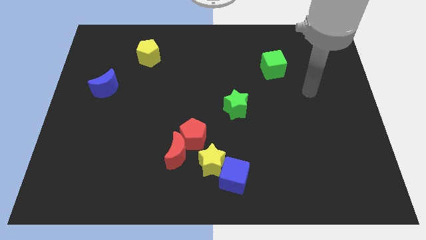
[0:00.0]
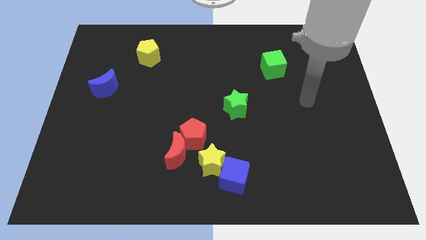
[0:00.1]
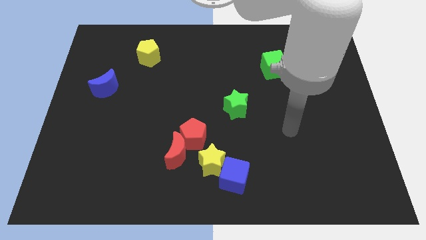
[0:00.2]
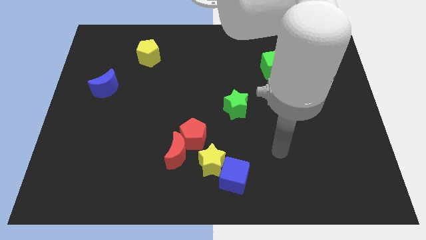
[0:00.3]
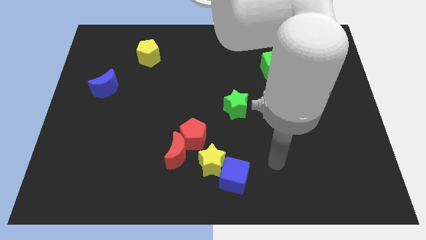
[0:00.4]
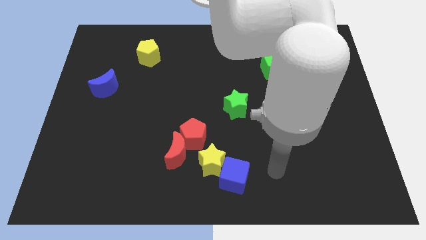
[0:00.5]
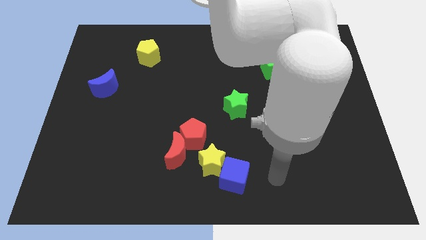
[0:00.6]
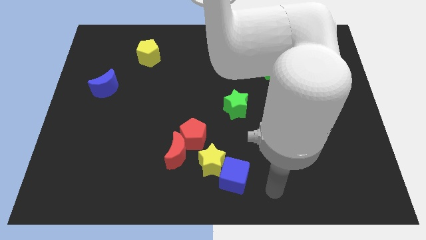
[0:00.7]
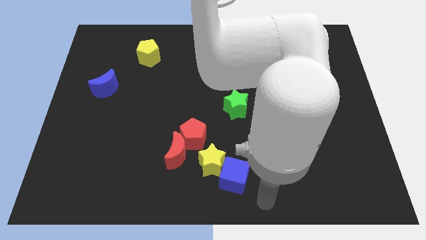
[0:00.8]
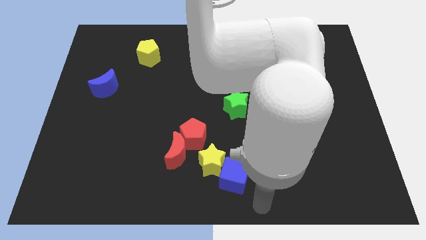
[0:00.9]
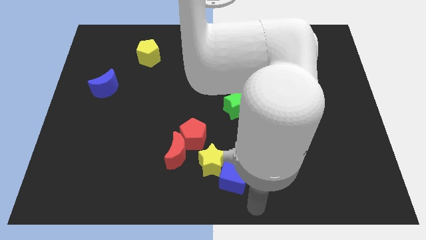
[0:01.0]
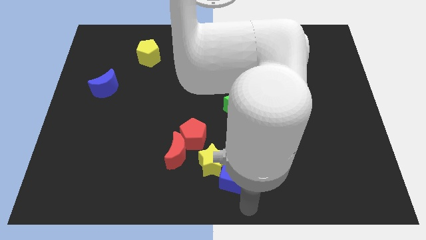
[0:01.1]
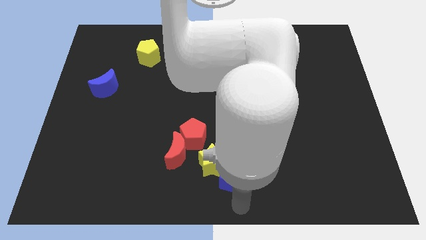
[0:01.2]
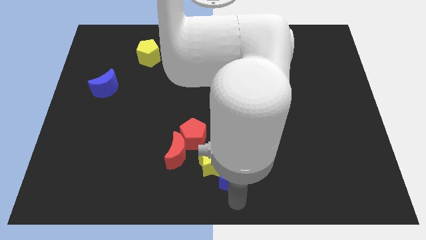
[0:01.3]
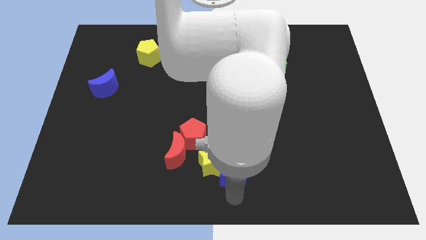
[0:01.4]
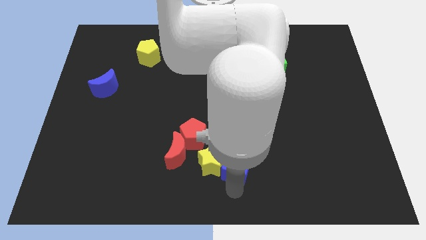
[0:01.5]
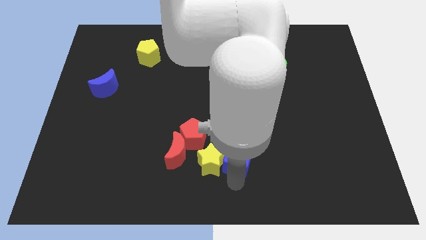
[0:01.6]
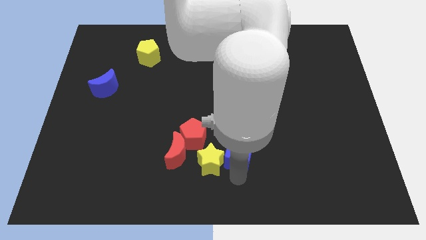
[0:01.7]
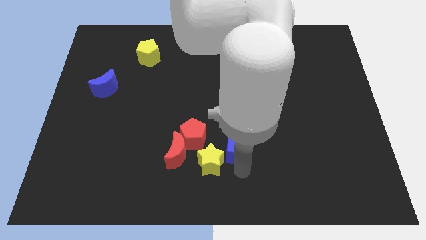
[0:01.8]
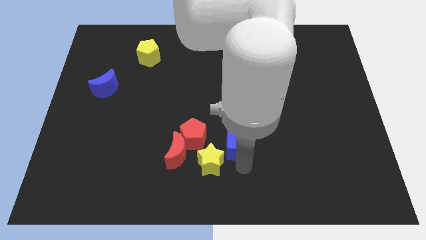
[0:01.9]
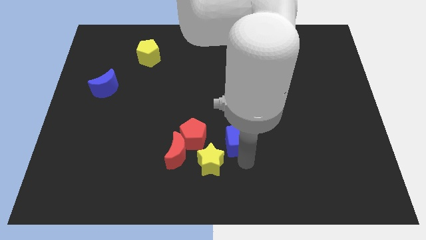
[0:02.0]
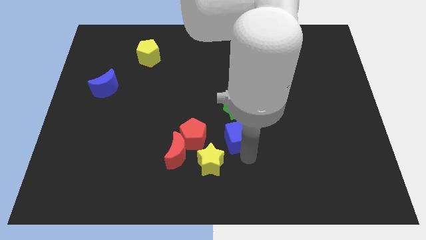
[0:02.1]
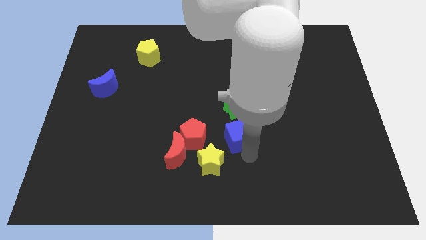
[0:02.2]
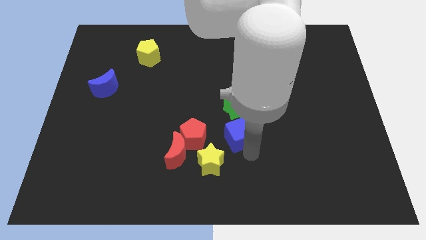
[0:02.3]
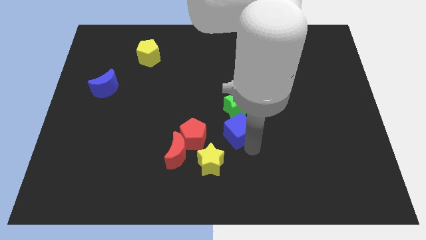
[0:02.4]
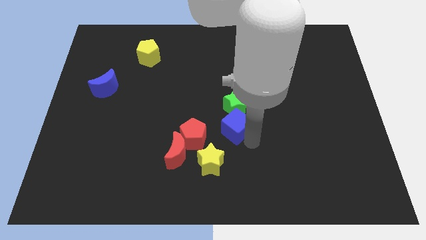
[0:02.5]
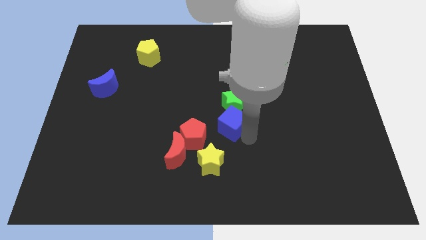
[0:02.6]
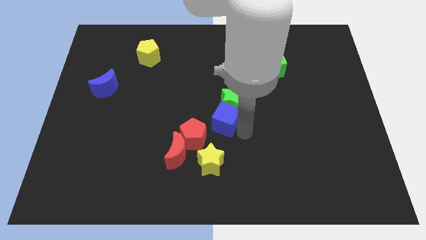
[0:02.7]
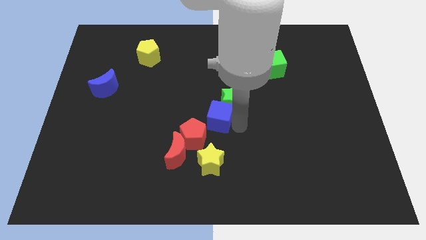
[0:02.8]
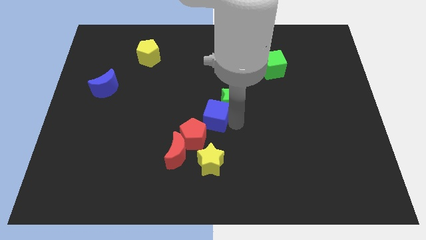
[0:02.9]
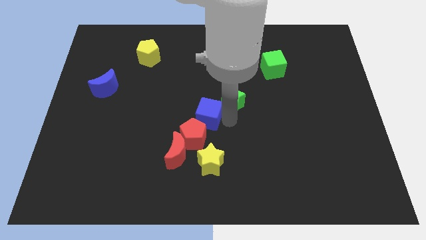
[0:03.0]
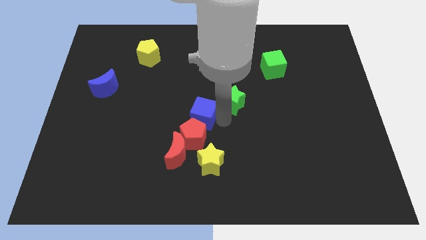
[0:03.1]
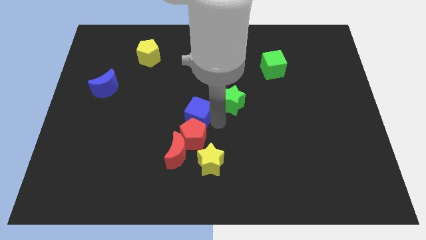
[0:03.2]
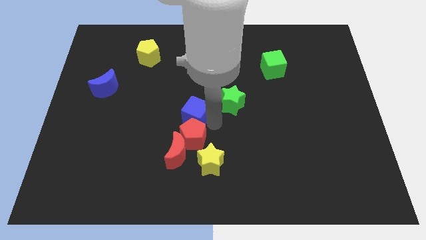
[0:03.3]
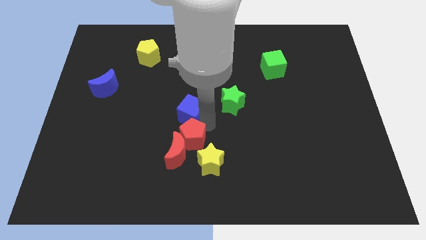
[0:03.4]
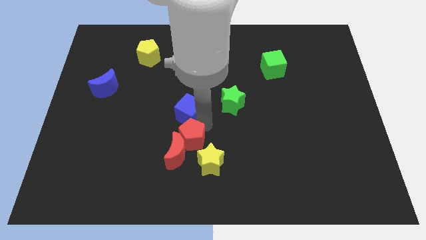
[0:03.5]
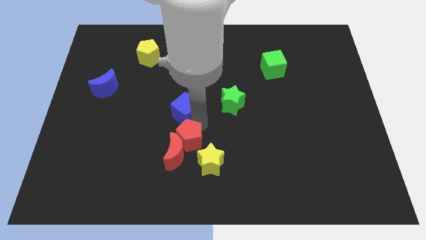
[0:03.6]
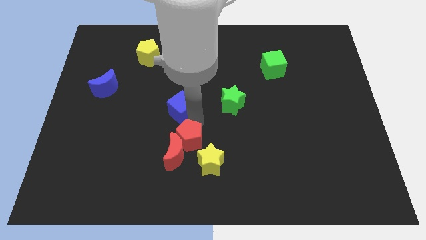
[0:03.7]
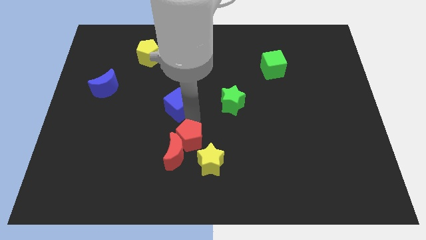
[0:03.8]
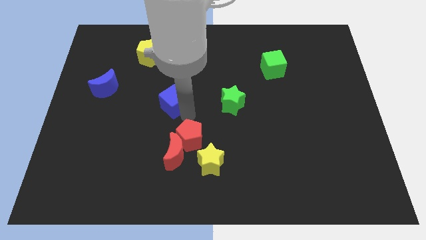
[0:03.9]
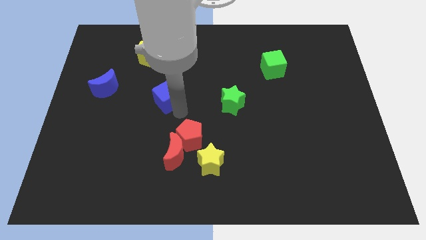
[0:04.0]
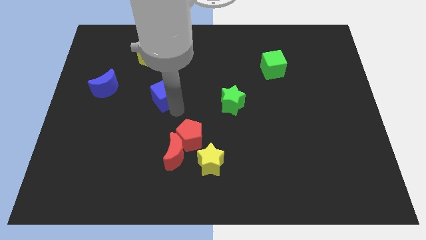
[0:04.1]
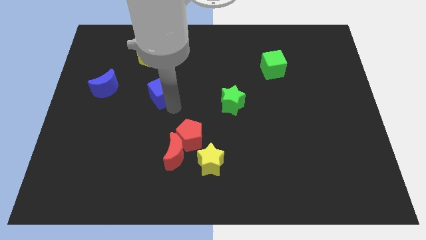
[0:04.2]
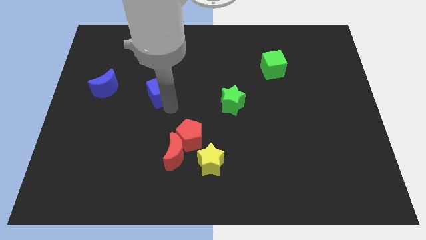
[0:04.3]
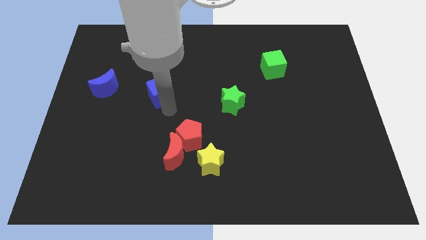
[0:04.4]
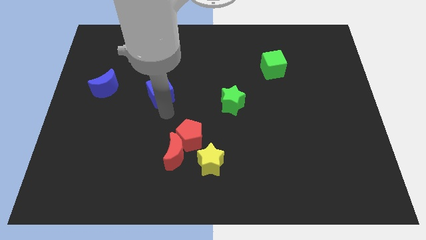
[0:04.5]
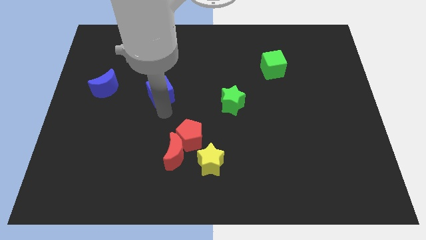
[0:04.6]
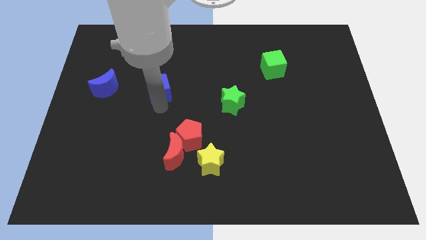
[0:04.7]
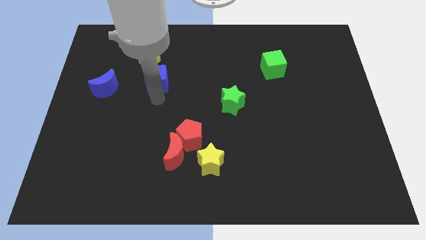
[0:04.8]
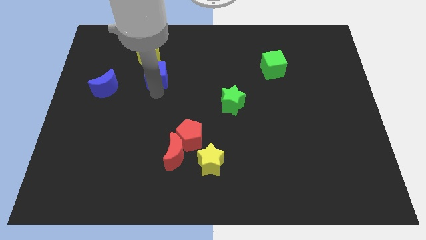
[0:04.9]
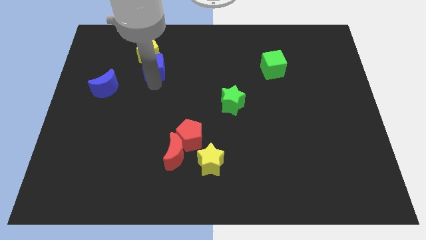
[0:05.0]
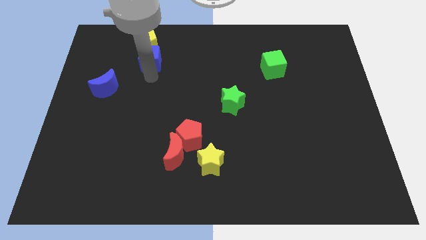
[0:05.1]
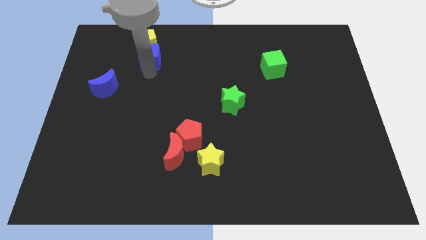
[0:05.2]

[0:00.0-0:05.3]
slide the blue cube close to the yellow pentagon

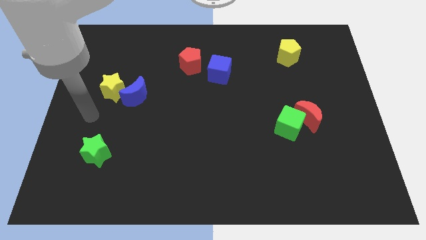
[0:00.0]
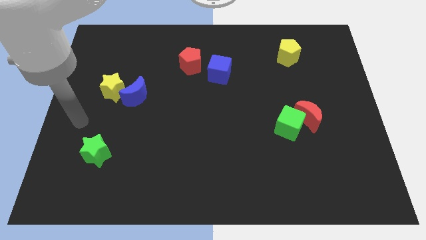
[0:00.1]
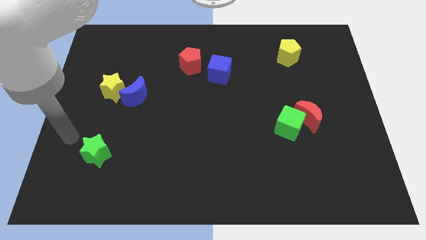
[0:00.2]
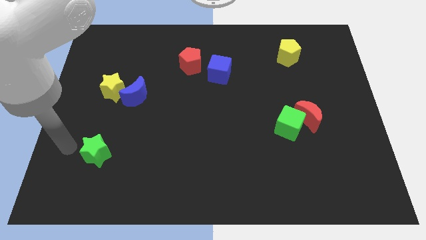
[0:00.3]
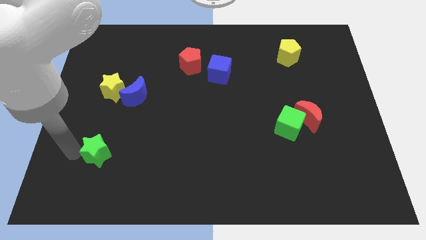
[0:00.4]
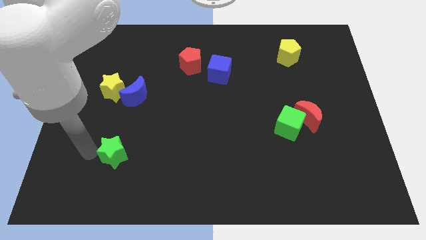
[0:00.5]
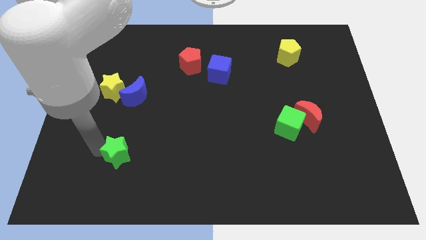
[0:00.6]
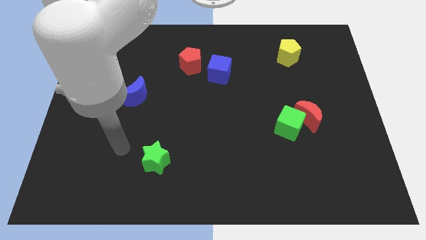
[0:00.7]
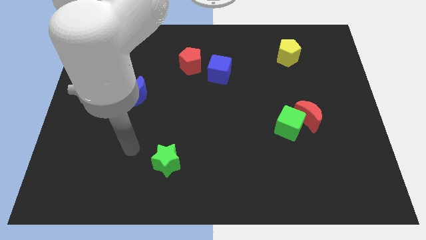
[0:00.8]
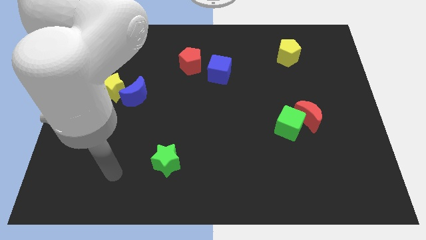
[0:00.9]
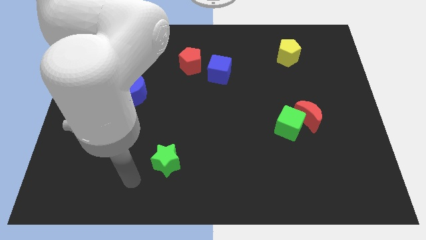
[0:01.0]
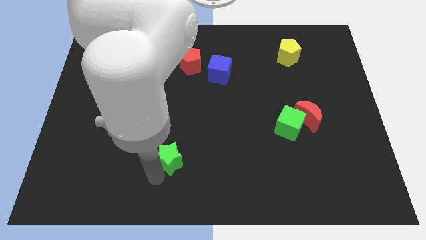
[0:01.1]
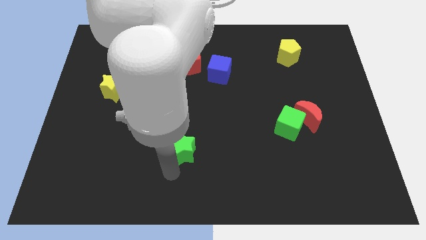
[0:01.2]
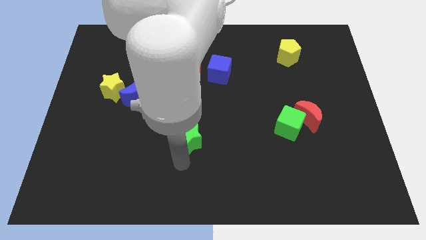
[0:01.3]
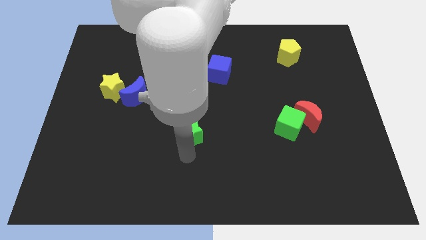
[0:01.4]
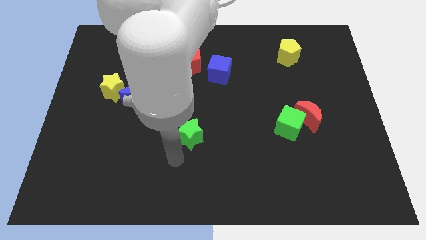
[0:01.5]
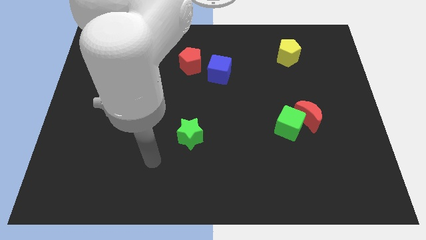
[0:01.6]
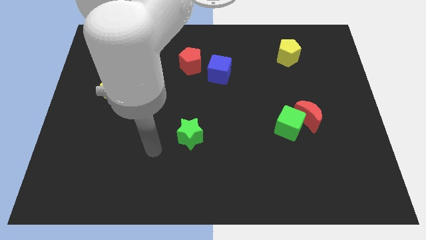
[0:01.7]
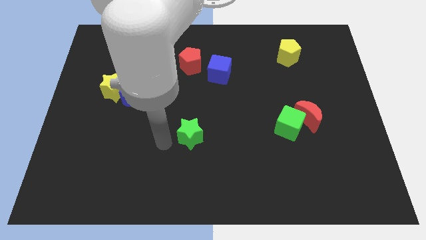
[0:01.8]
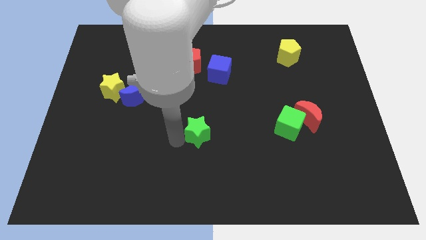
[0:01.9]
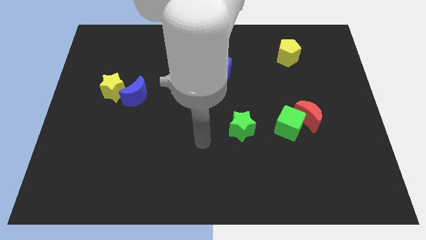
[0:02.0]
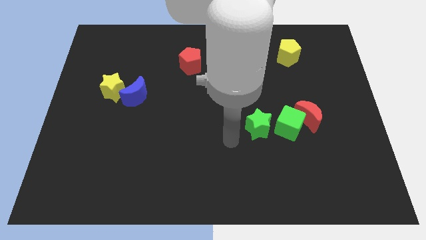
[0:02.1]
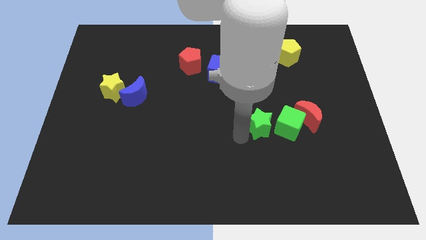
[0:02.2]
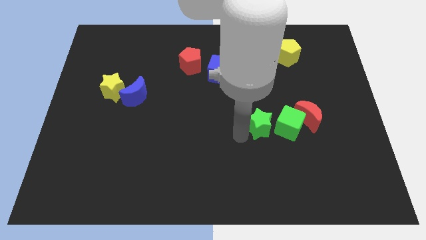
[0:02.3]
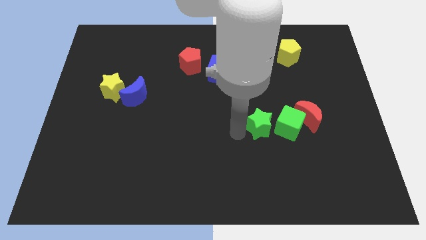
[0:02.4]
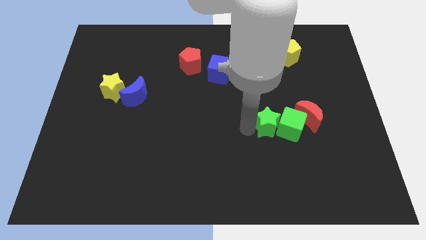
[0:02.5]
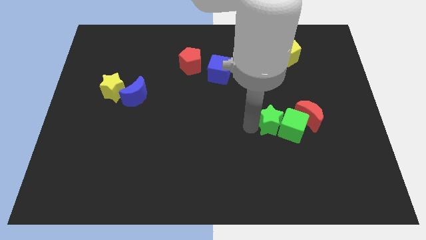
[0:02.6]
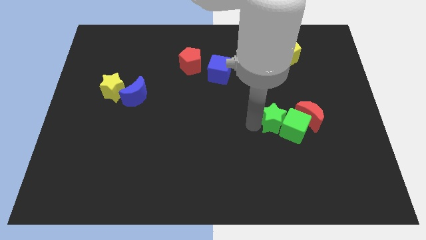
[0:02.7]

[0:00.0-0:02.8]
put the green star to the green cube
